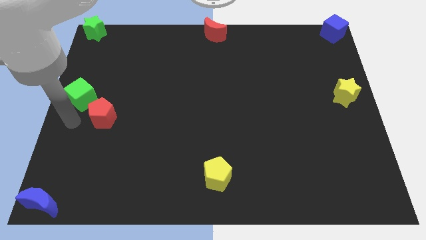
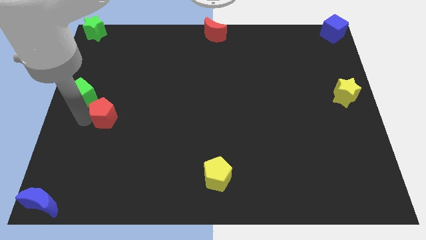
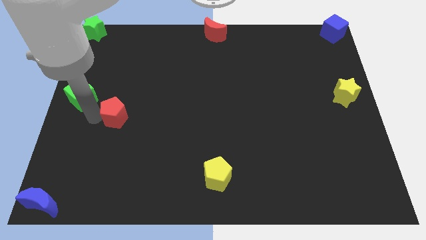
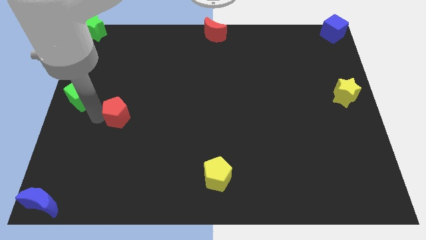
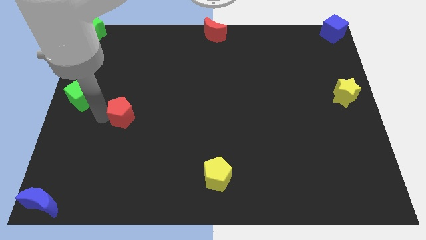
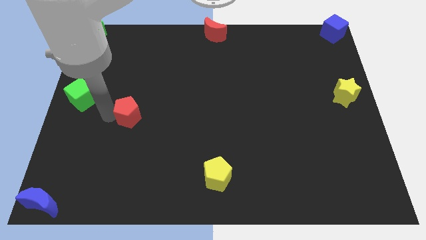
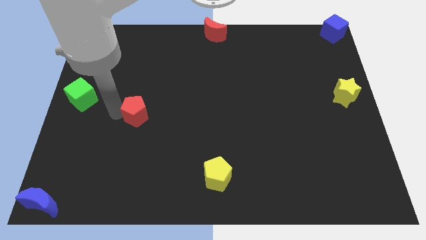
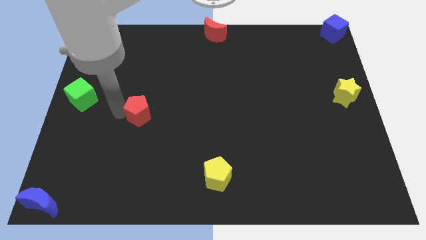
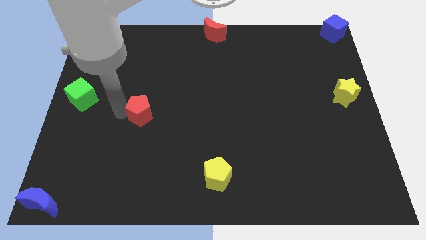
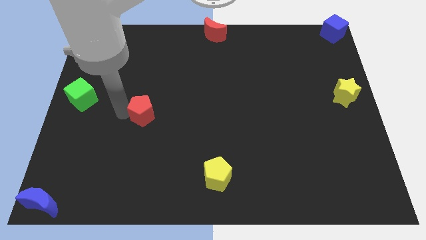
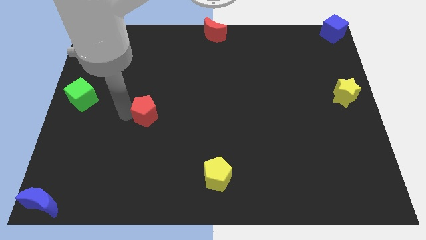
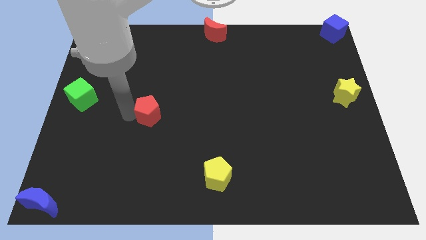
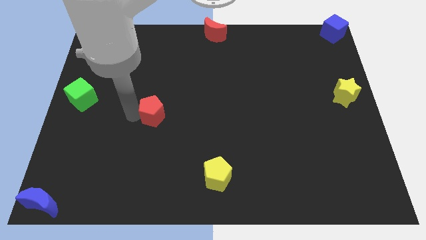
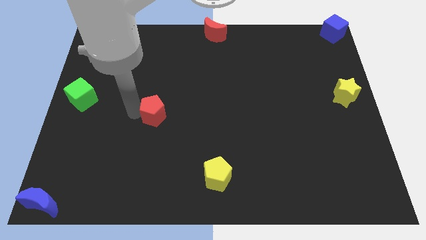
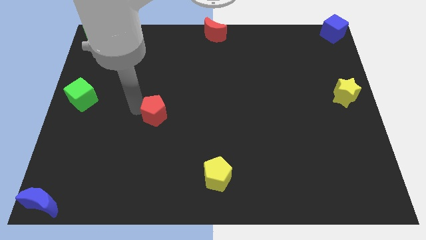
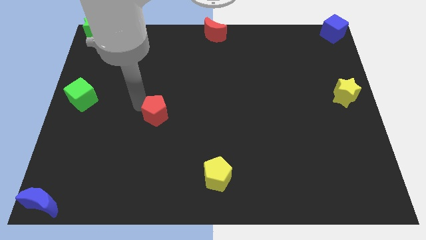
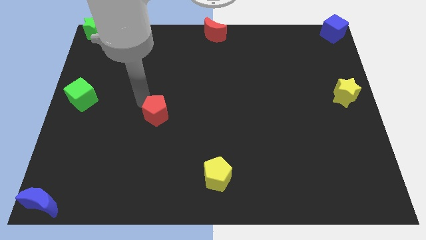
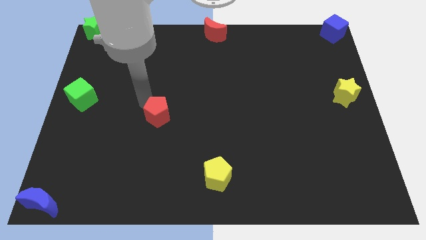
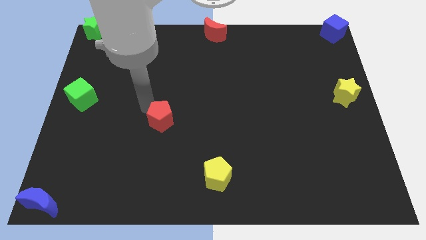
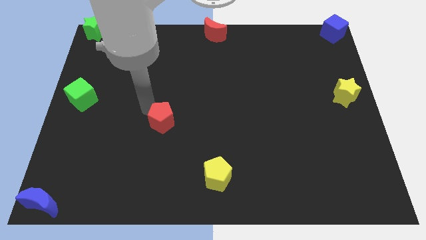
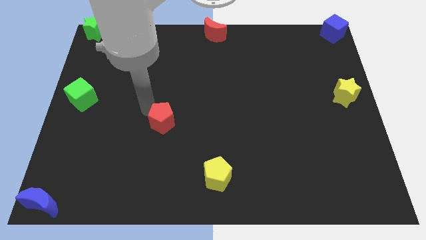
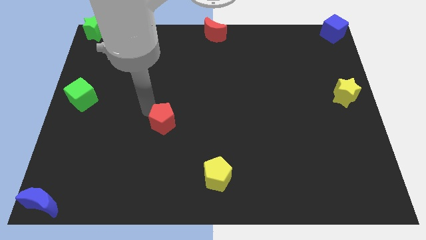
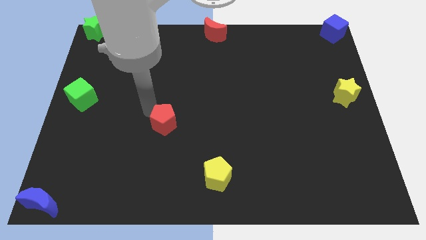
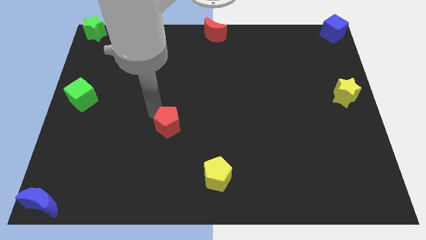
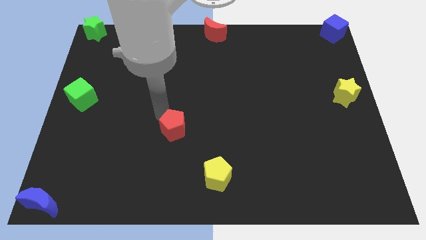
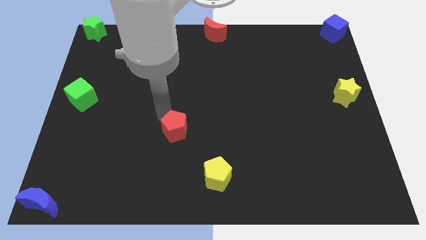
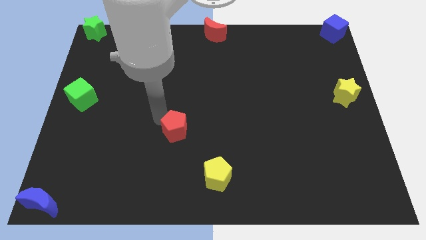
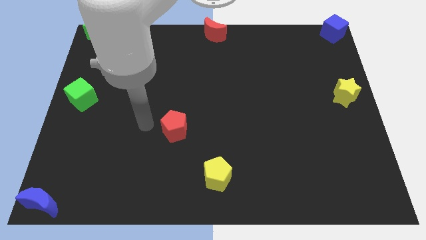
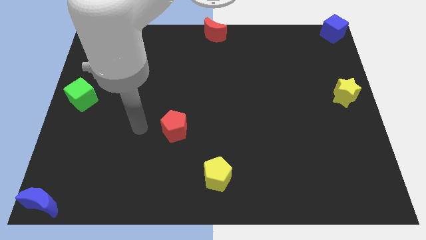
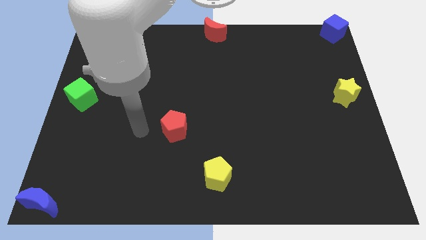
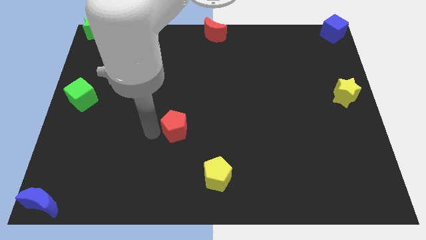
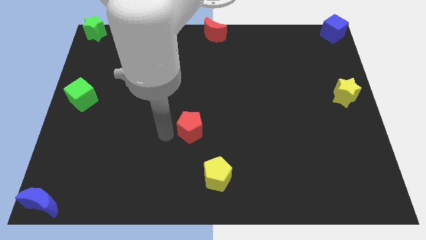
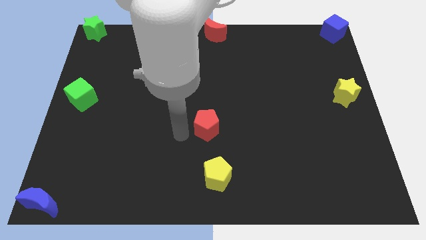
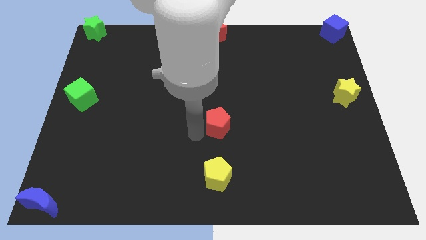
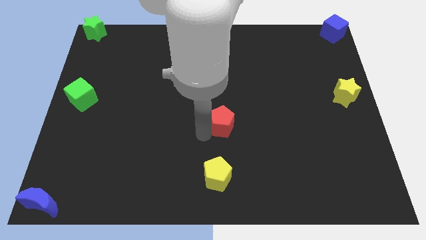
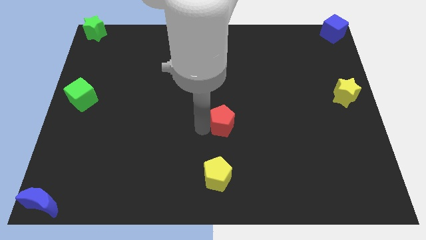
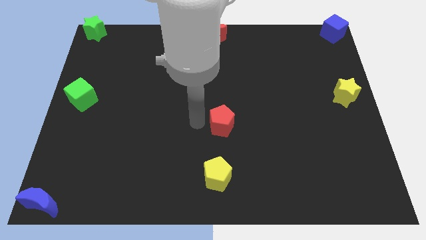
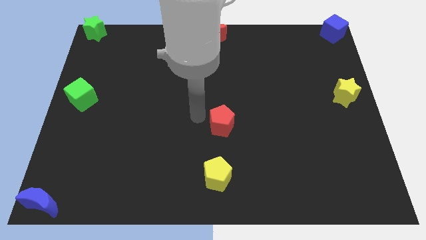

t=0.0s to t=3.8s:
place the red pentagon vertically above the yellow pentagon

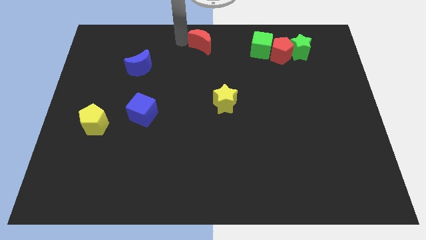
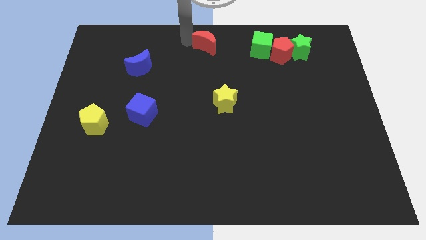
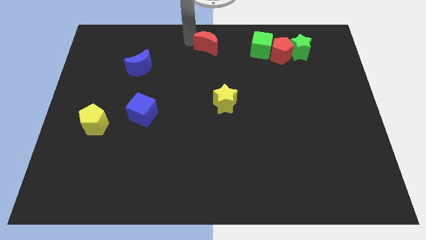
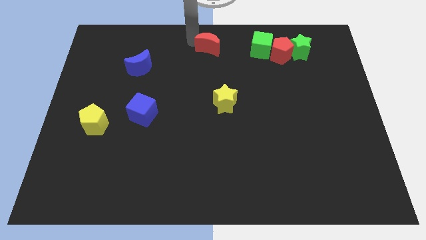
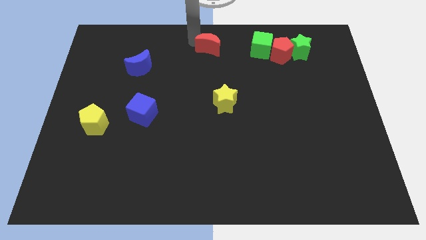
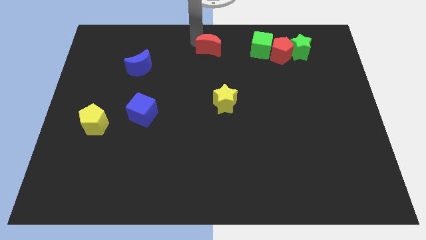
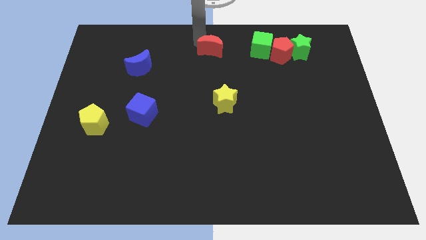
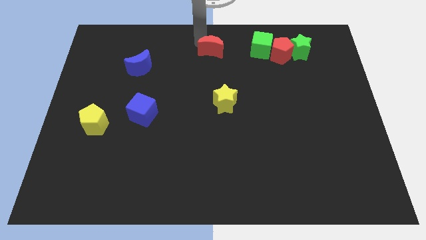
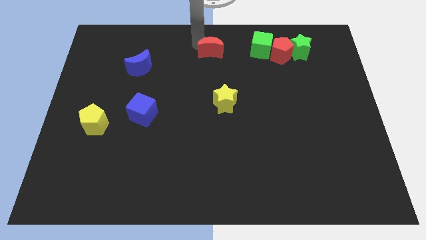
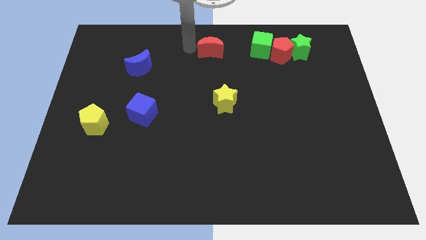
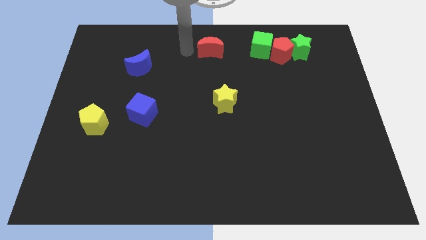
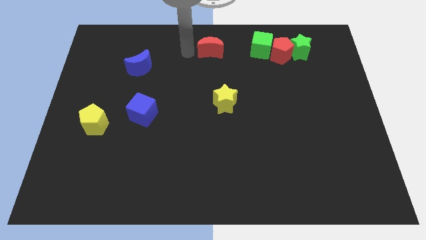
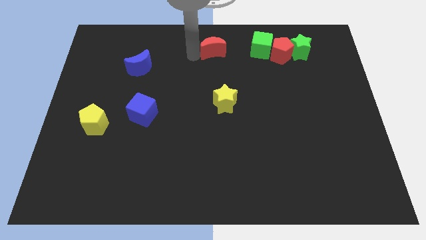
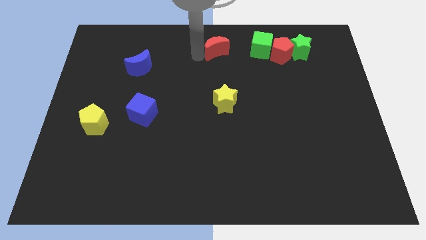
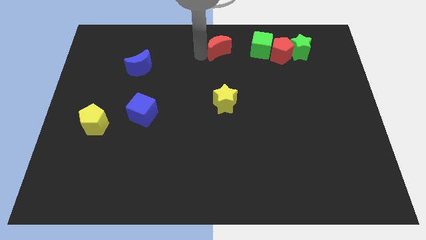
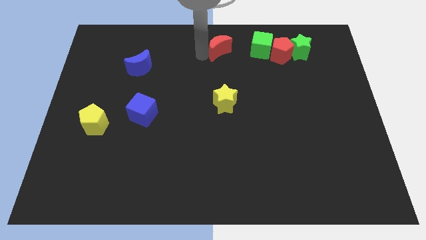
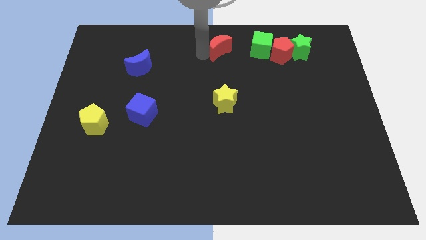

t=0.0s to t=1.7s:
push the red crescent slightly to the right

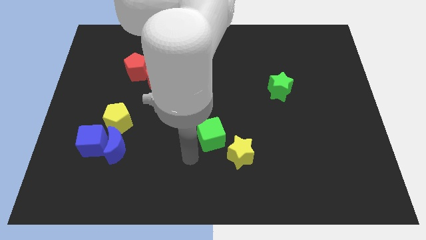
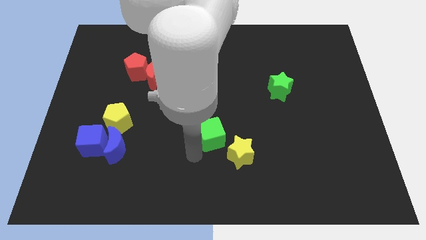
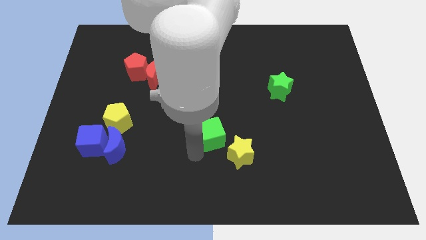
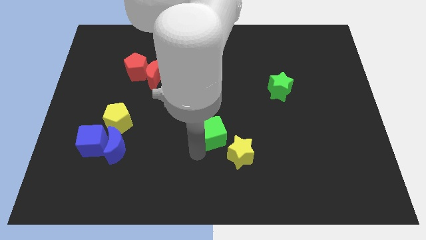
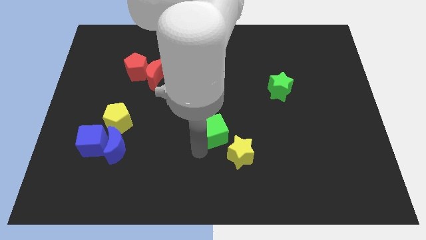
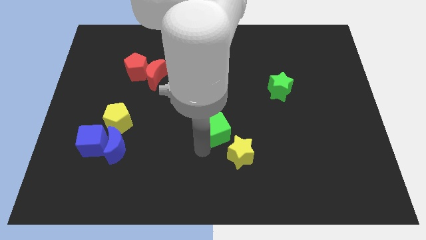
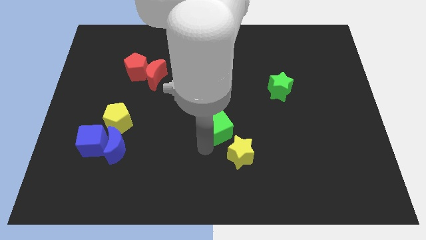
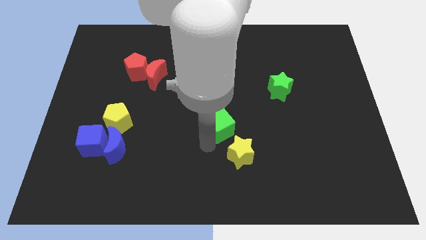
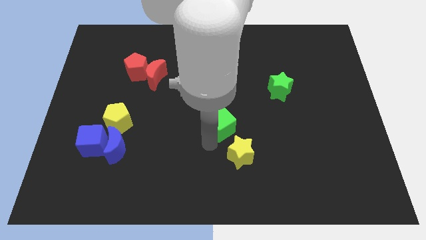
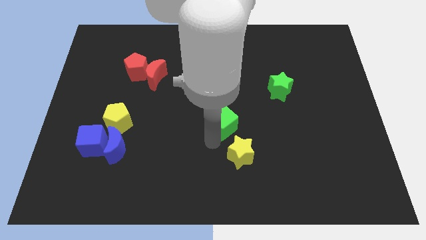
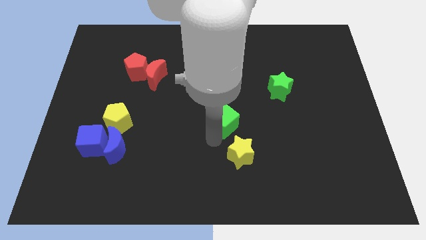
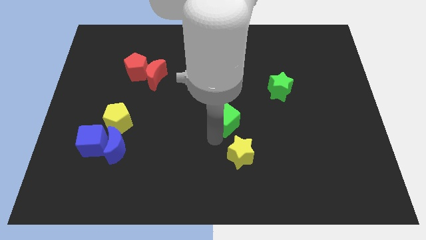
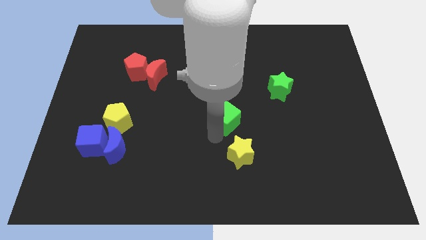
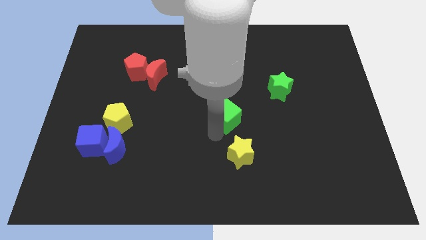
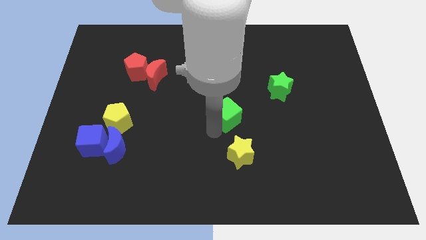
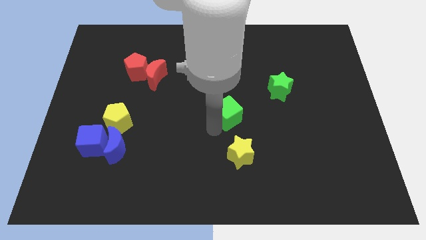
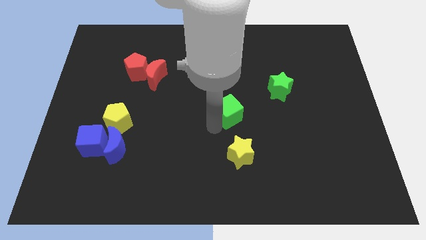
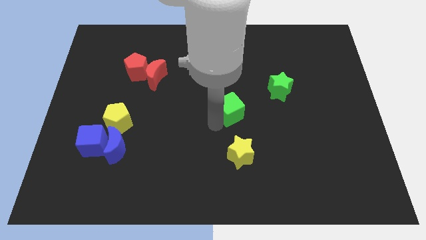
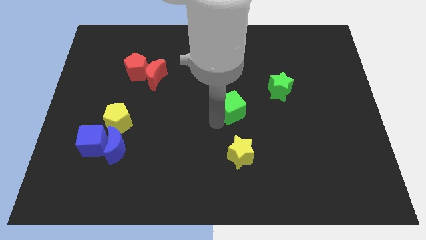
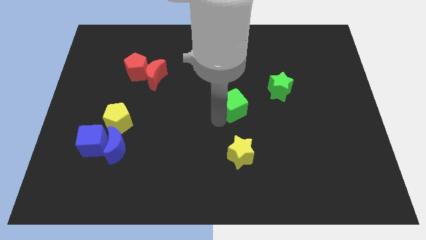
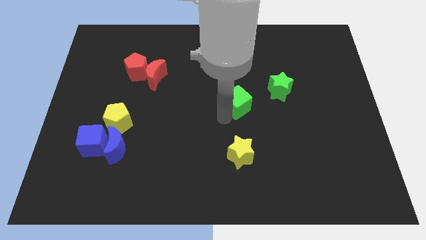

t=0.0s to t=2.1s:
move the green cube to the top of the yellow star

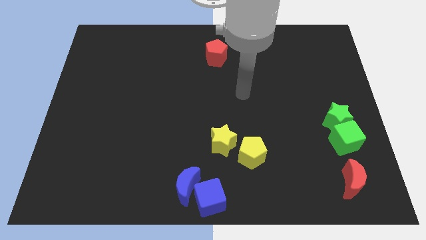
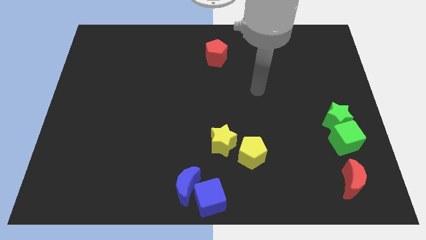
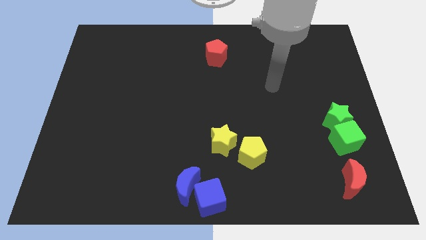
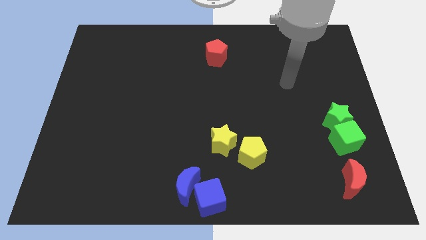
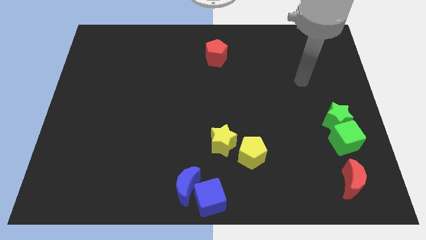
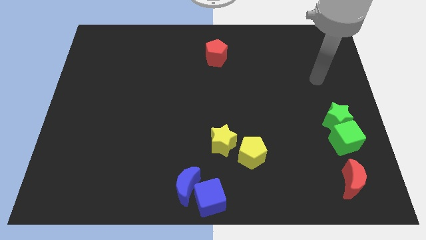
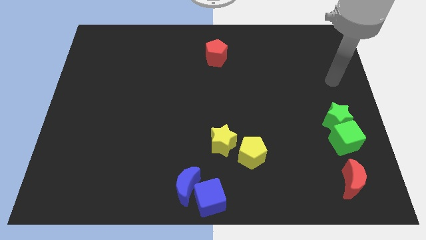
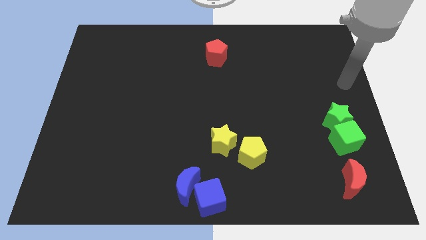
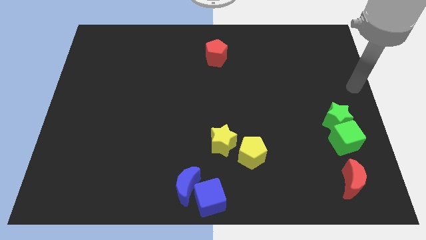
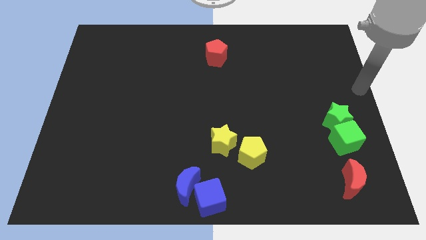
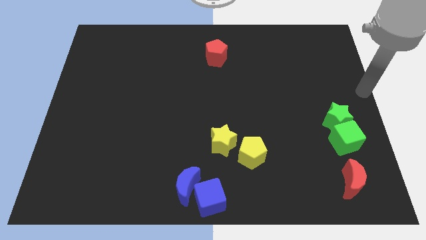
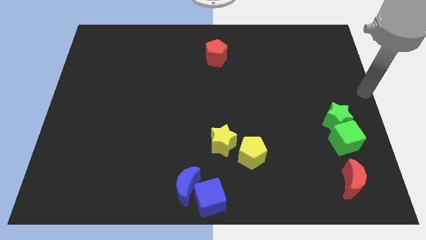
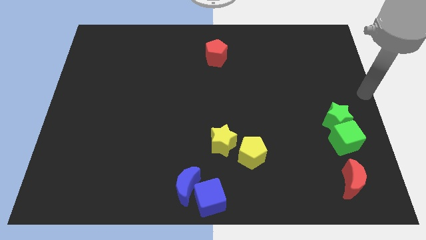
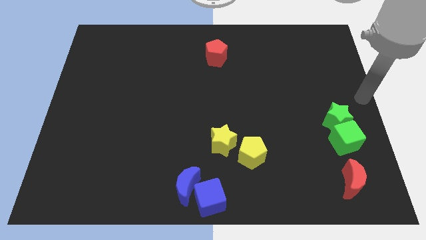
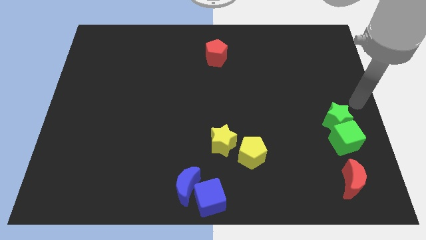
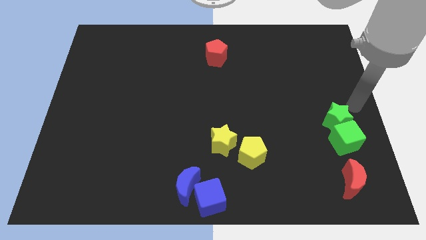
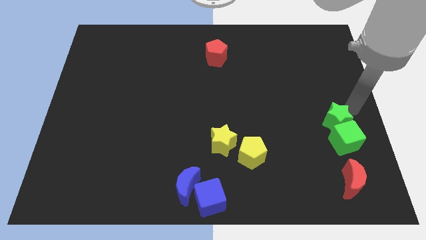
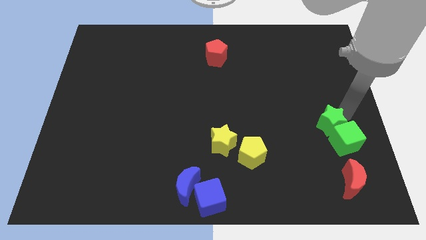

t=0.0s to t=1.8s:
move yourself close to the green star
